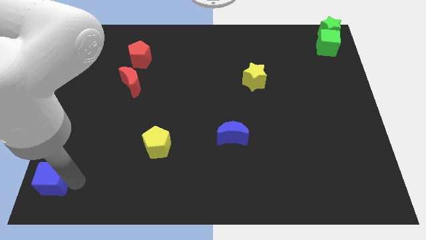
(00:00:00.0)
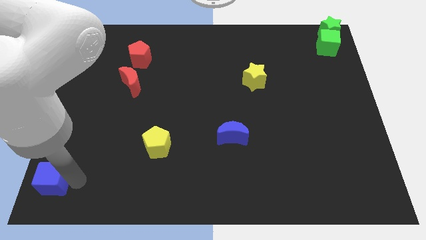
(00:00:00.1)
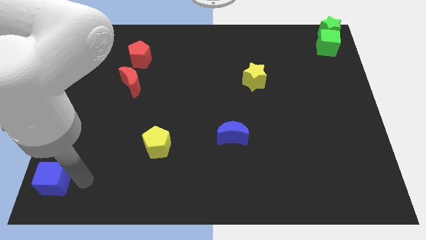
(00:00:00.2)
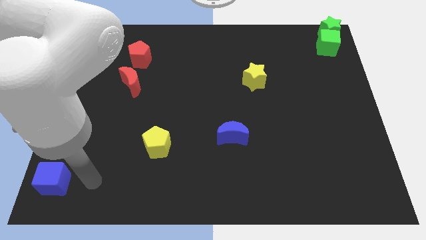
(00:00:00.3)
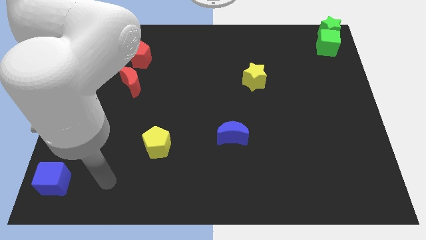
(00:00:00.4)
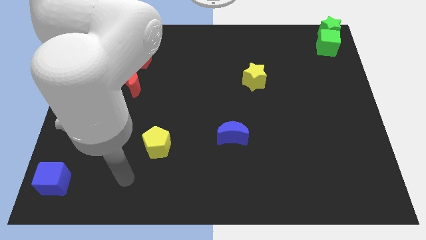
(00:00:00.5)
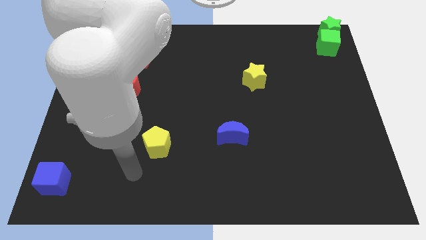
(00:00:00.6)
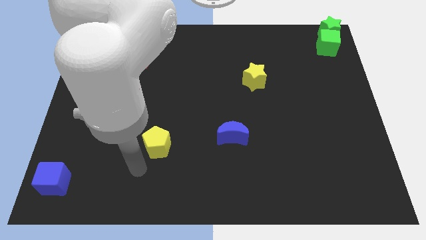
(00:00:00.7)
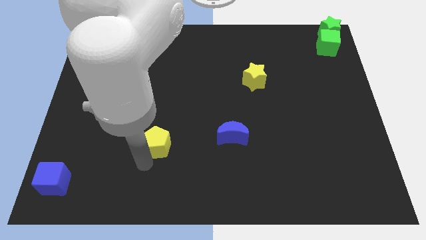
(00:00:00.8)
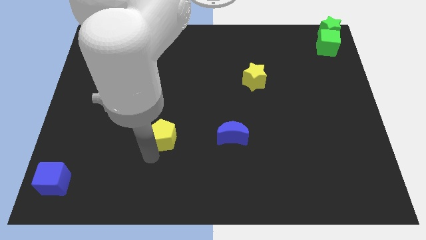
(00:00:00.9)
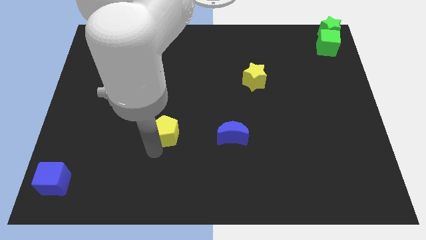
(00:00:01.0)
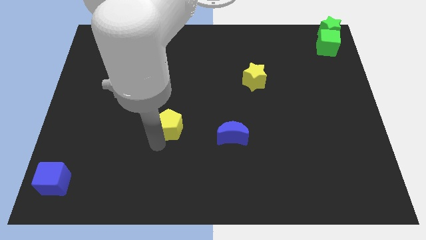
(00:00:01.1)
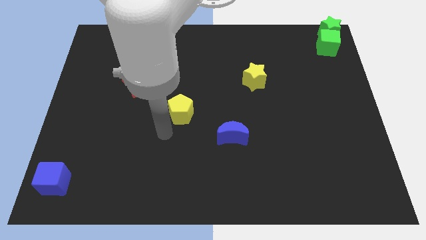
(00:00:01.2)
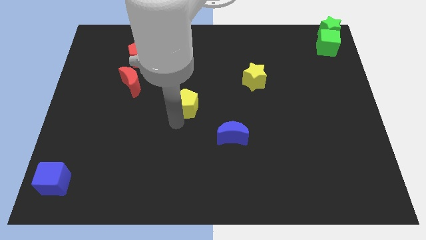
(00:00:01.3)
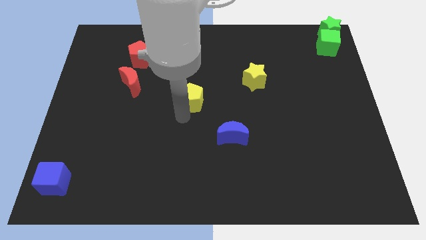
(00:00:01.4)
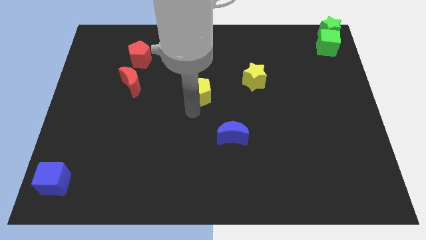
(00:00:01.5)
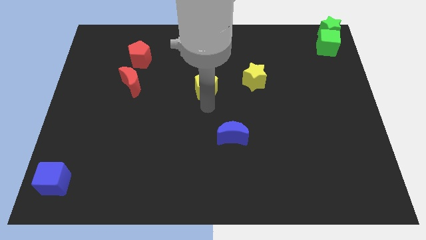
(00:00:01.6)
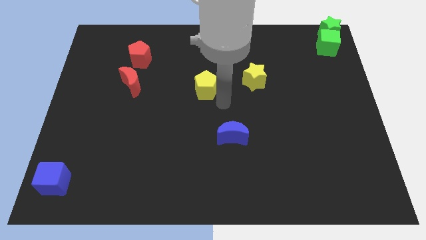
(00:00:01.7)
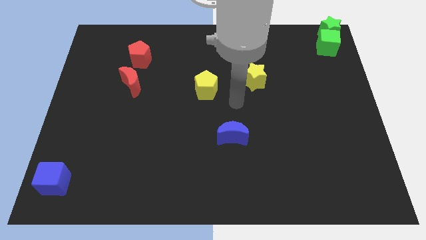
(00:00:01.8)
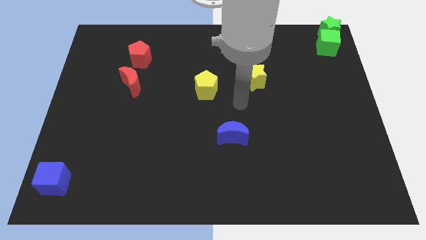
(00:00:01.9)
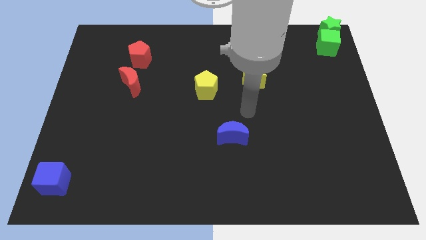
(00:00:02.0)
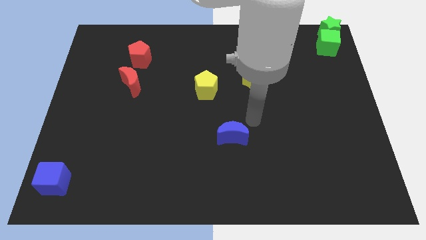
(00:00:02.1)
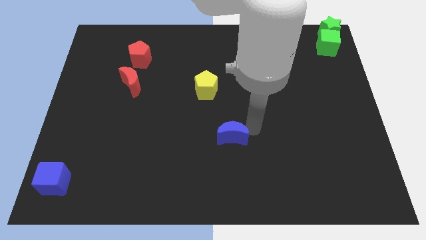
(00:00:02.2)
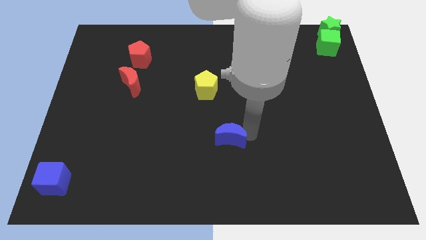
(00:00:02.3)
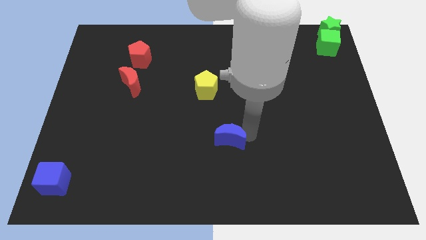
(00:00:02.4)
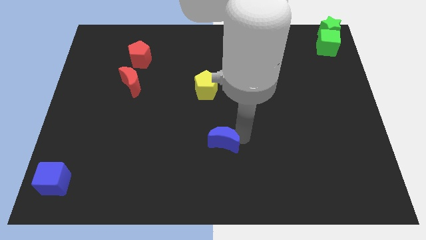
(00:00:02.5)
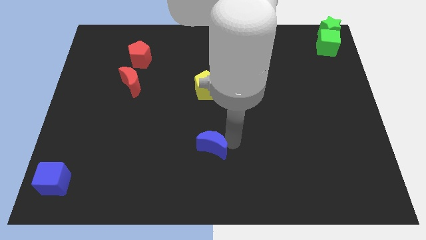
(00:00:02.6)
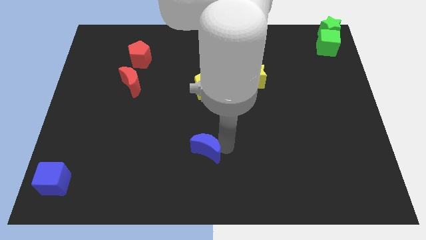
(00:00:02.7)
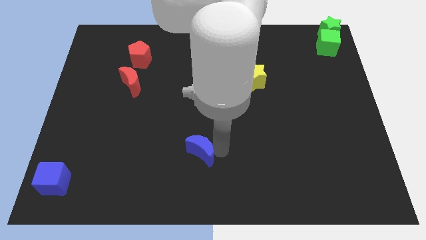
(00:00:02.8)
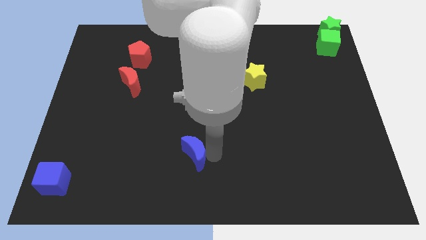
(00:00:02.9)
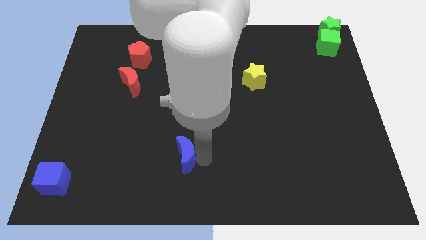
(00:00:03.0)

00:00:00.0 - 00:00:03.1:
push the yellow pentagon and blue moon in opposite directions

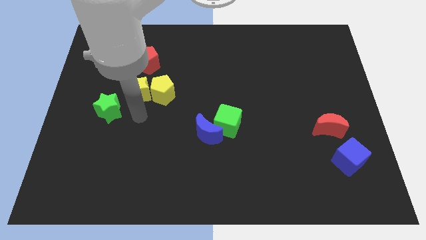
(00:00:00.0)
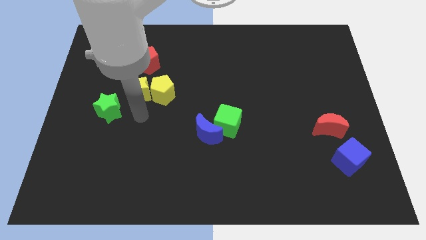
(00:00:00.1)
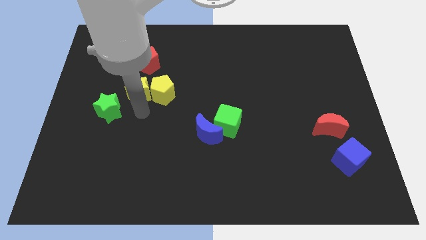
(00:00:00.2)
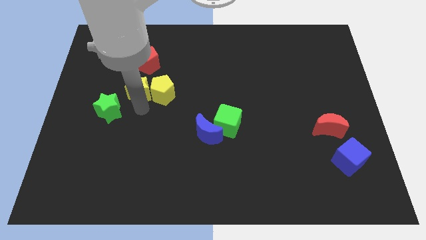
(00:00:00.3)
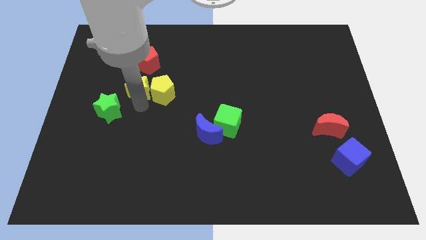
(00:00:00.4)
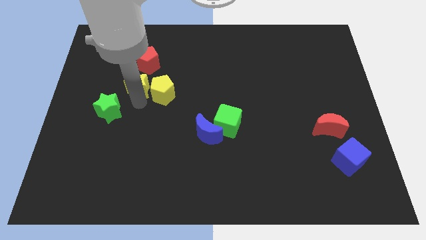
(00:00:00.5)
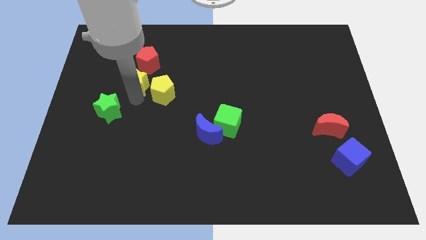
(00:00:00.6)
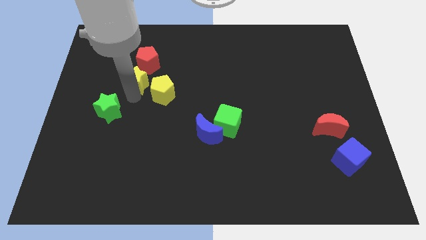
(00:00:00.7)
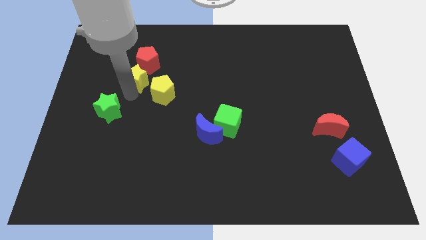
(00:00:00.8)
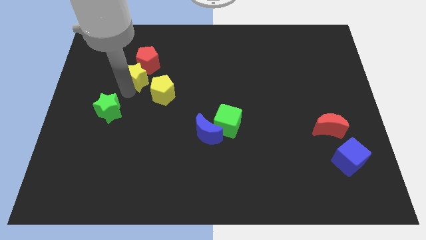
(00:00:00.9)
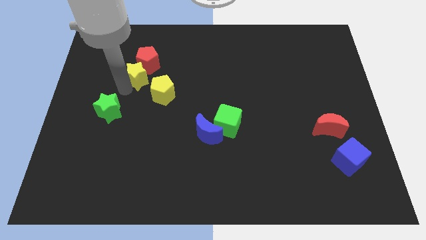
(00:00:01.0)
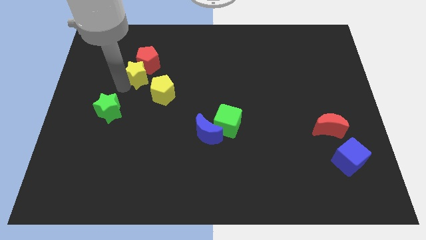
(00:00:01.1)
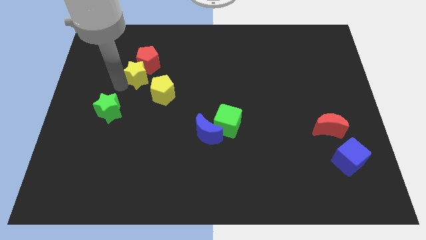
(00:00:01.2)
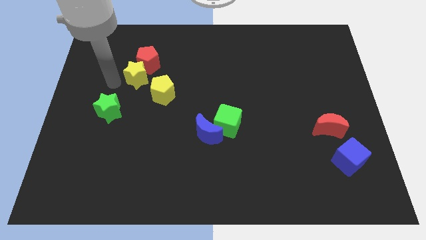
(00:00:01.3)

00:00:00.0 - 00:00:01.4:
move the yellow star to the bottom left side of the red pentagon

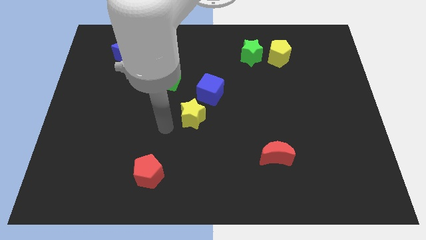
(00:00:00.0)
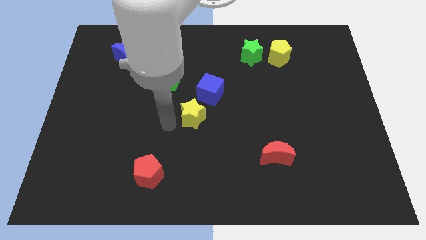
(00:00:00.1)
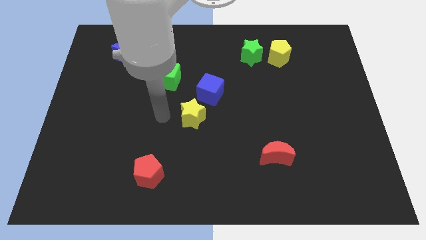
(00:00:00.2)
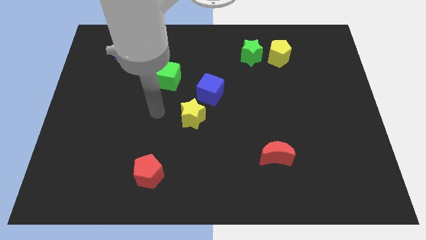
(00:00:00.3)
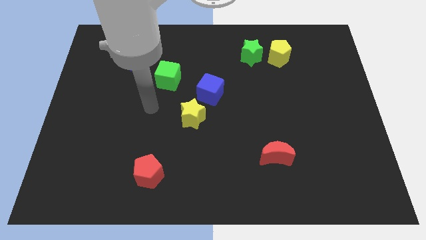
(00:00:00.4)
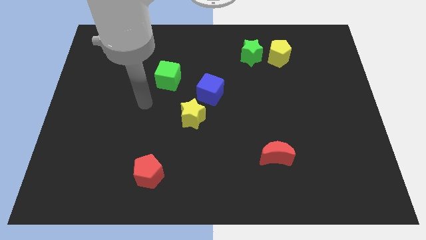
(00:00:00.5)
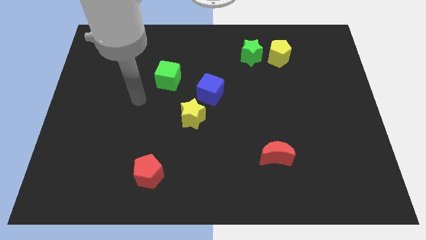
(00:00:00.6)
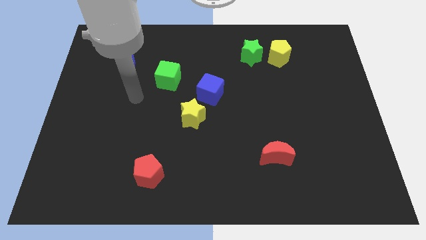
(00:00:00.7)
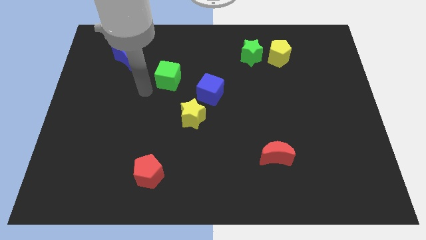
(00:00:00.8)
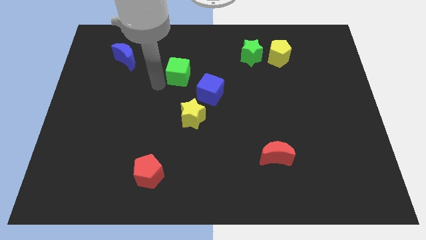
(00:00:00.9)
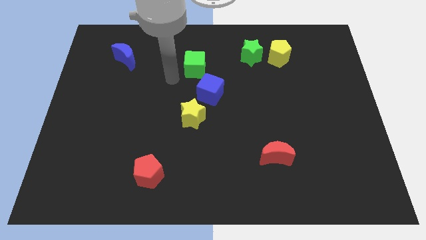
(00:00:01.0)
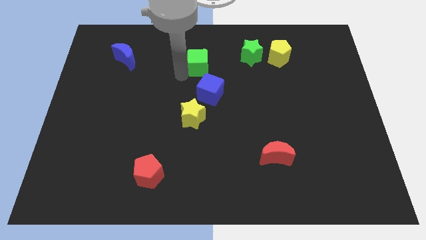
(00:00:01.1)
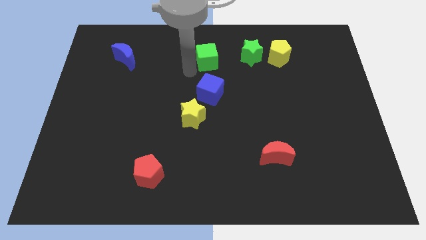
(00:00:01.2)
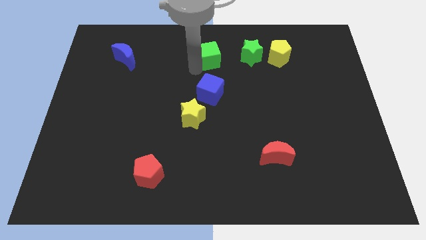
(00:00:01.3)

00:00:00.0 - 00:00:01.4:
place green star vertical to blue cube

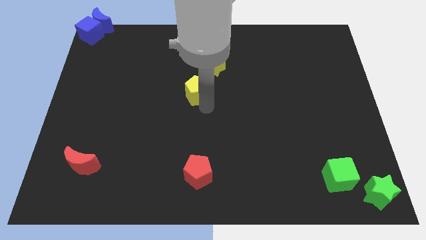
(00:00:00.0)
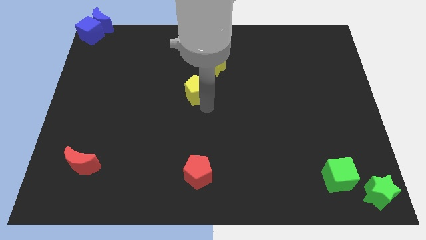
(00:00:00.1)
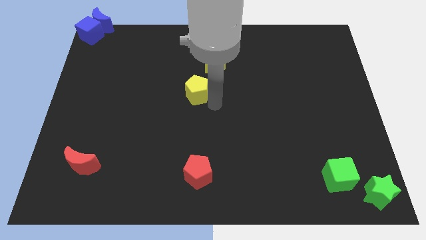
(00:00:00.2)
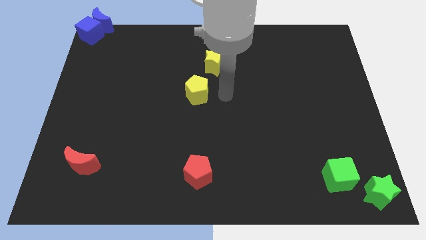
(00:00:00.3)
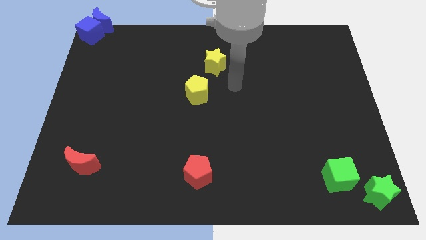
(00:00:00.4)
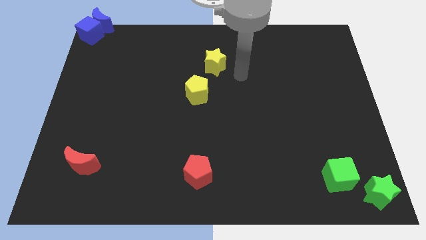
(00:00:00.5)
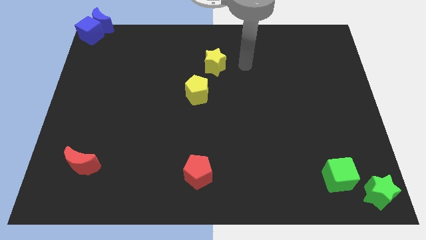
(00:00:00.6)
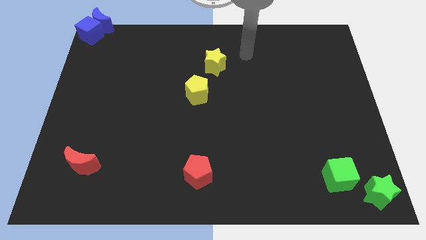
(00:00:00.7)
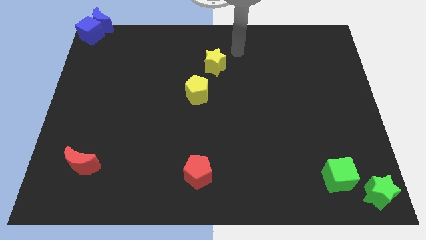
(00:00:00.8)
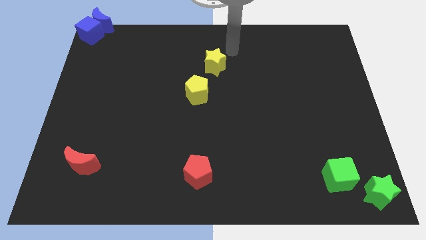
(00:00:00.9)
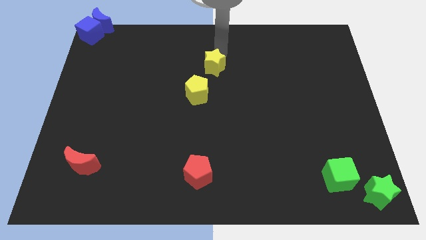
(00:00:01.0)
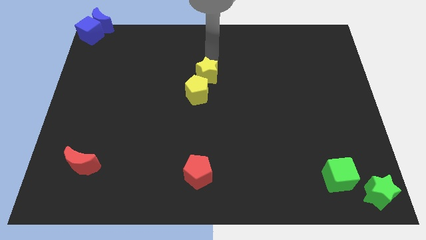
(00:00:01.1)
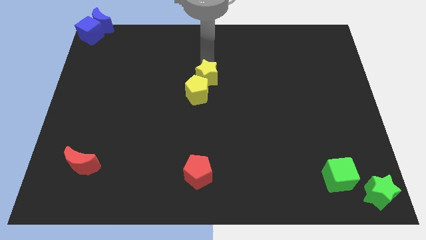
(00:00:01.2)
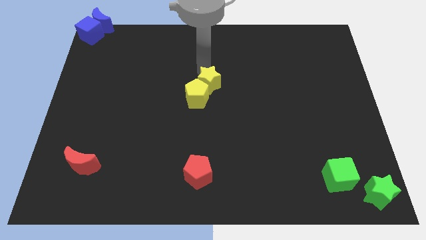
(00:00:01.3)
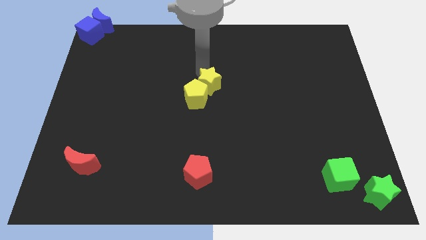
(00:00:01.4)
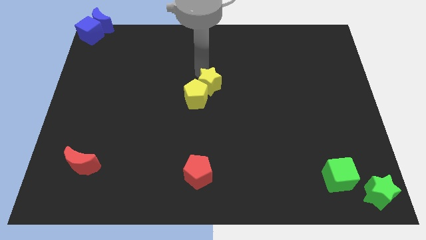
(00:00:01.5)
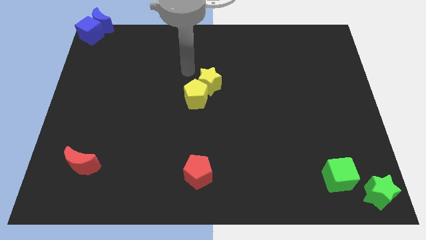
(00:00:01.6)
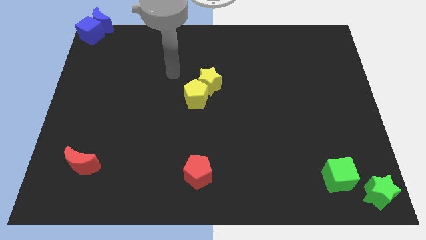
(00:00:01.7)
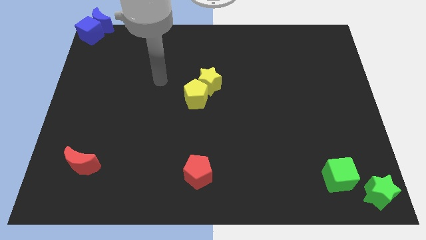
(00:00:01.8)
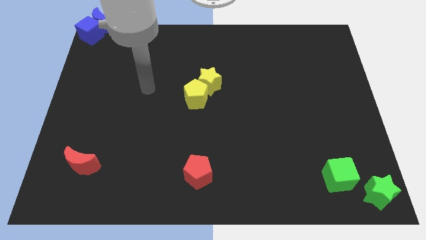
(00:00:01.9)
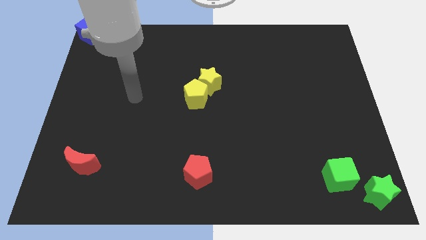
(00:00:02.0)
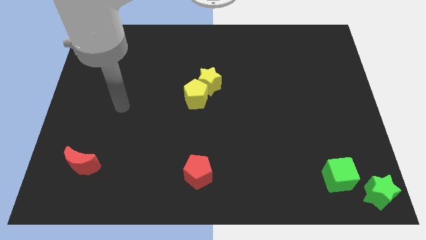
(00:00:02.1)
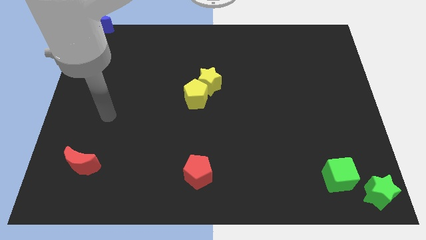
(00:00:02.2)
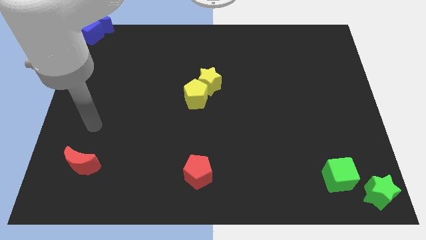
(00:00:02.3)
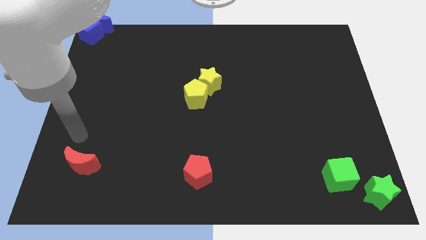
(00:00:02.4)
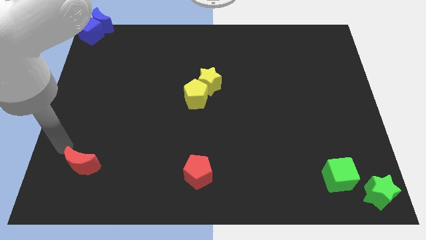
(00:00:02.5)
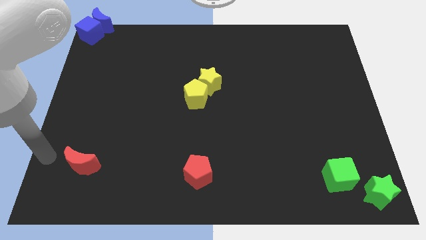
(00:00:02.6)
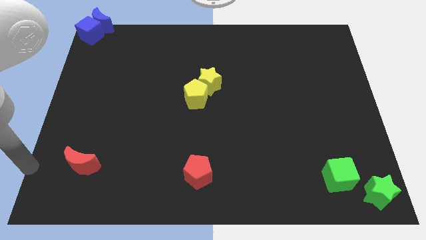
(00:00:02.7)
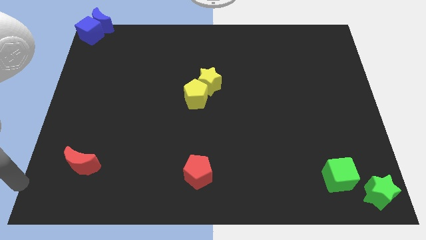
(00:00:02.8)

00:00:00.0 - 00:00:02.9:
move yellow star into yellow pentagon
